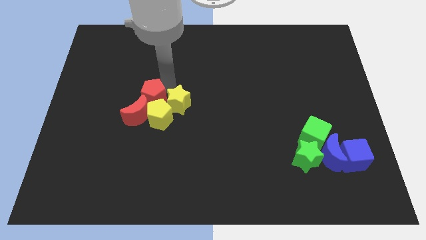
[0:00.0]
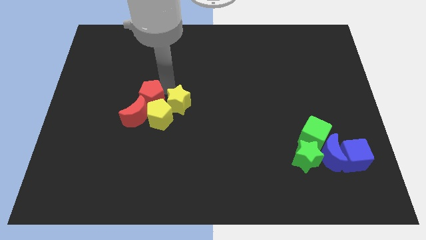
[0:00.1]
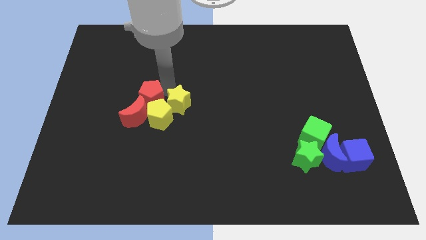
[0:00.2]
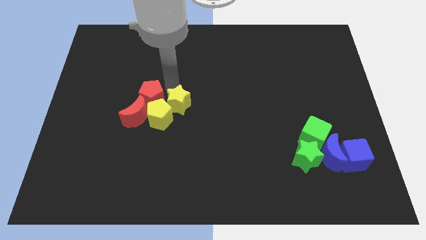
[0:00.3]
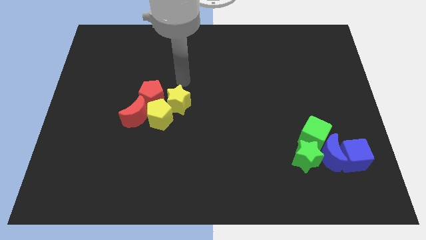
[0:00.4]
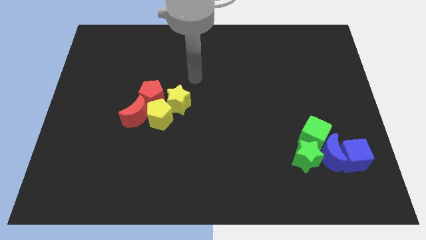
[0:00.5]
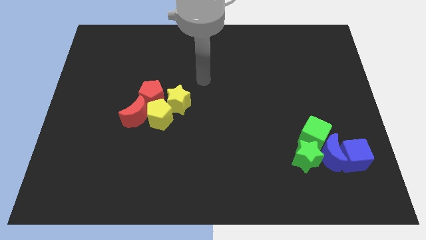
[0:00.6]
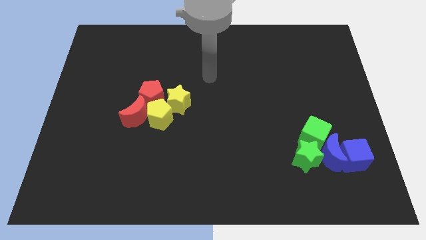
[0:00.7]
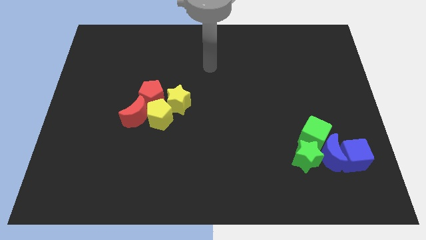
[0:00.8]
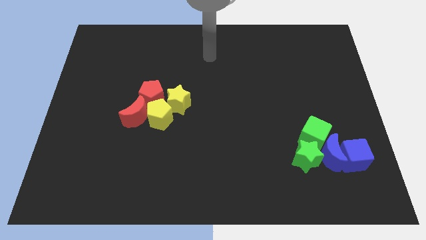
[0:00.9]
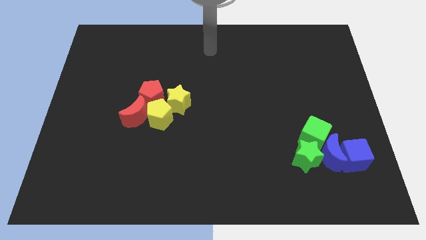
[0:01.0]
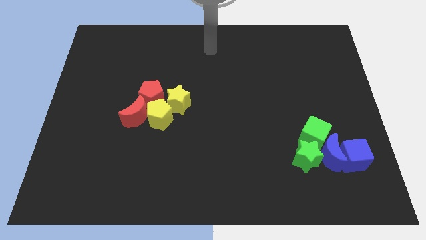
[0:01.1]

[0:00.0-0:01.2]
move arm to the center top

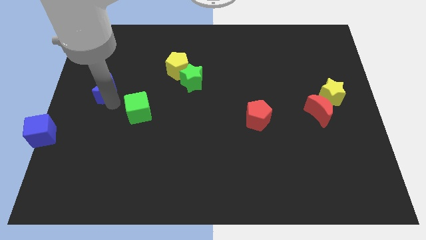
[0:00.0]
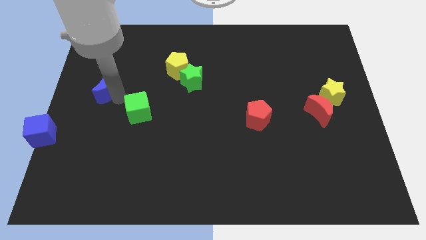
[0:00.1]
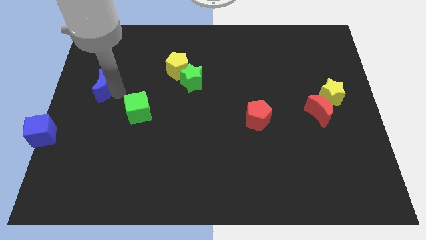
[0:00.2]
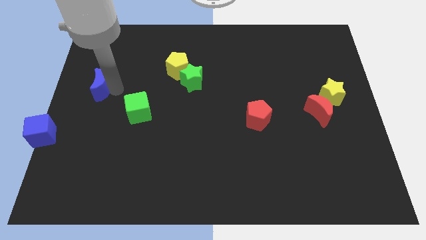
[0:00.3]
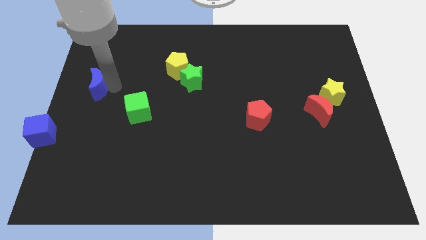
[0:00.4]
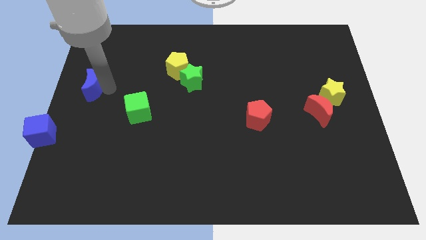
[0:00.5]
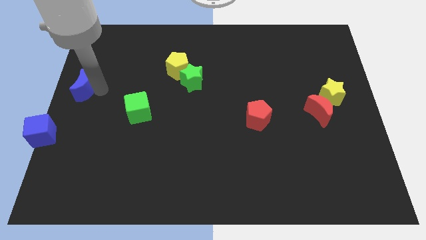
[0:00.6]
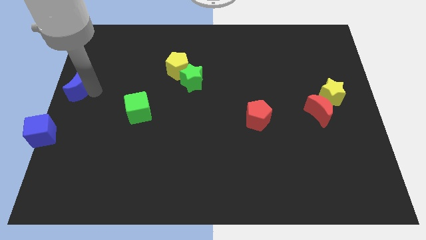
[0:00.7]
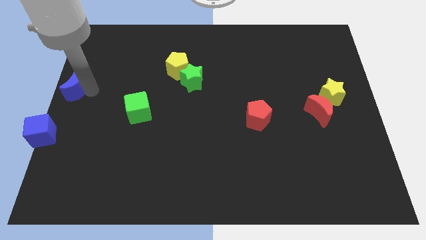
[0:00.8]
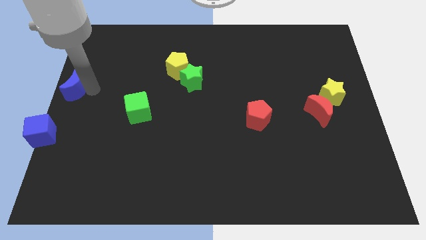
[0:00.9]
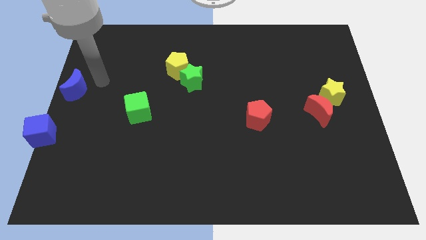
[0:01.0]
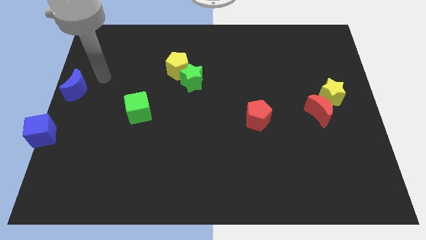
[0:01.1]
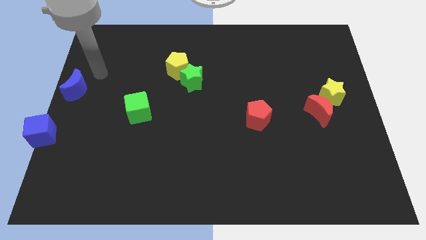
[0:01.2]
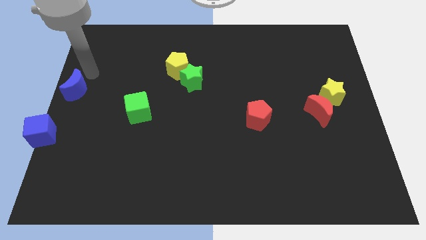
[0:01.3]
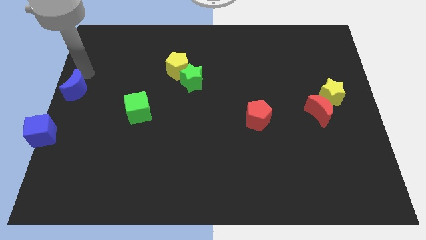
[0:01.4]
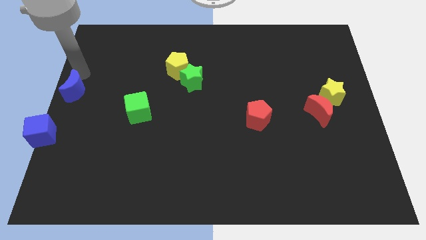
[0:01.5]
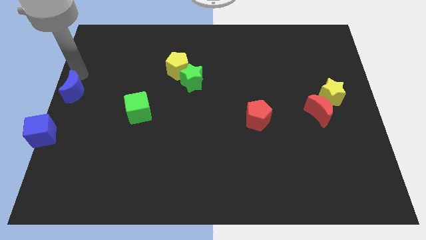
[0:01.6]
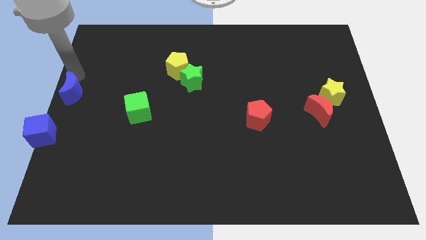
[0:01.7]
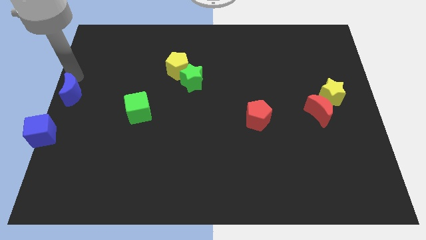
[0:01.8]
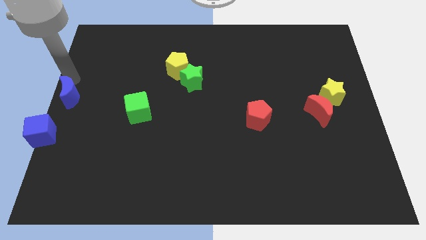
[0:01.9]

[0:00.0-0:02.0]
push the blue moon to the left of the board

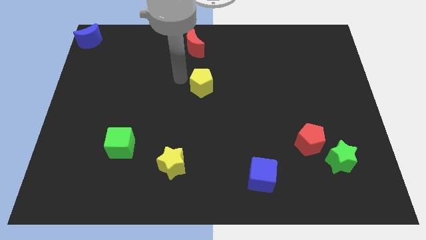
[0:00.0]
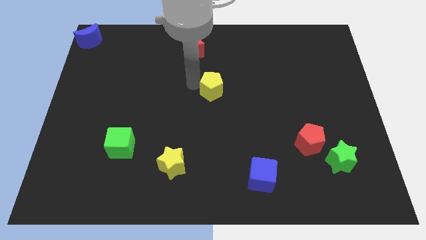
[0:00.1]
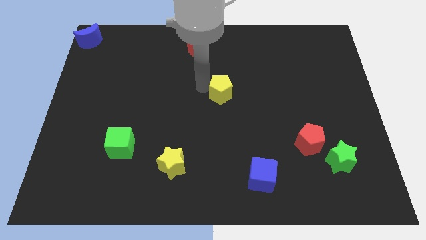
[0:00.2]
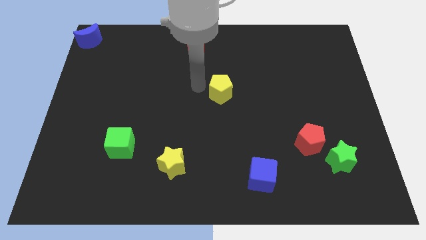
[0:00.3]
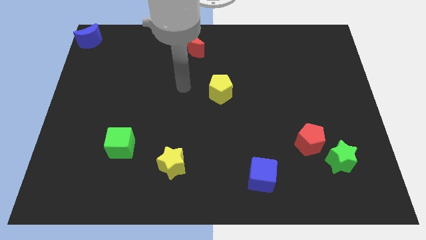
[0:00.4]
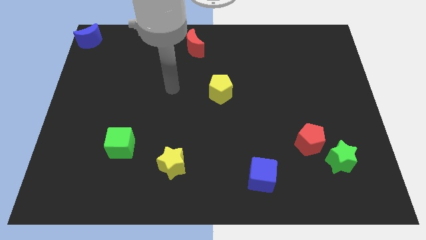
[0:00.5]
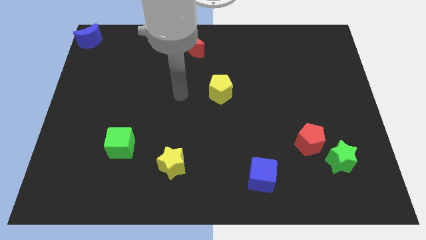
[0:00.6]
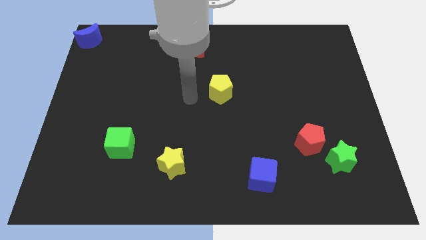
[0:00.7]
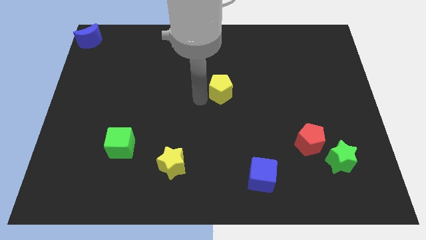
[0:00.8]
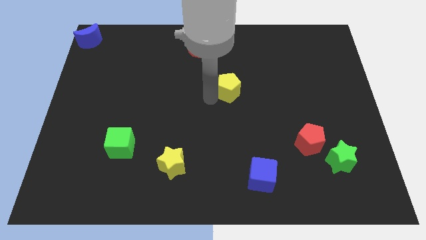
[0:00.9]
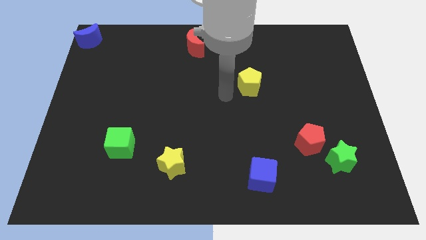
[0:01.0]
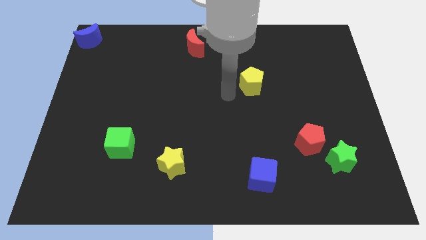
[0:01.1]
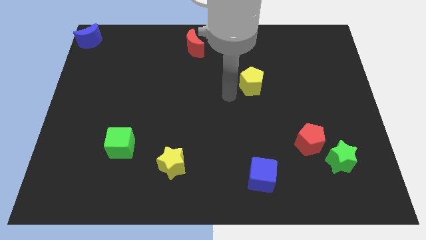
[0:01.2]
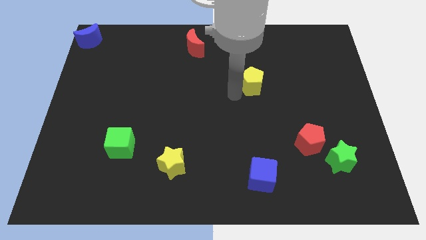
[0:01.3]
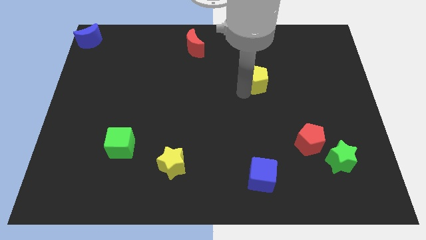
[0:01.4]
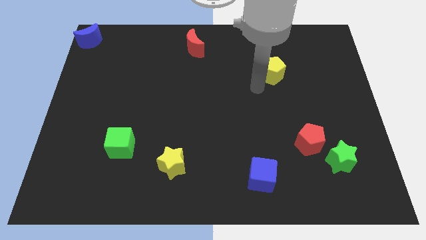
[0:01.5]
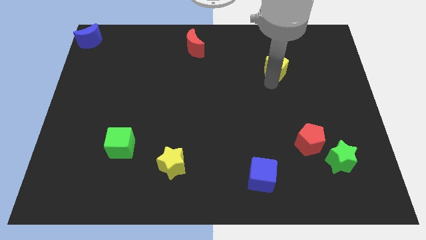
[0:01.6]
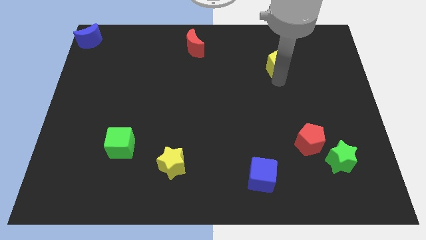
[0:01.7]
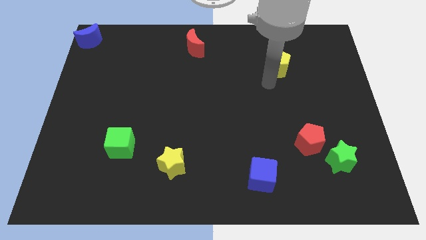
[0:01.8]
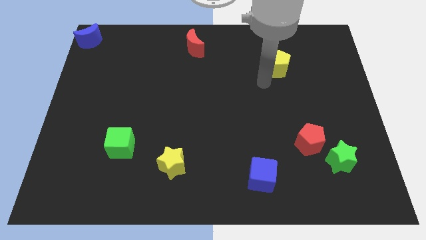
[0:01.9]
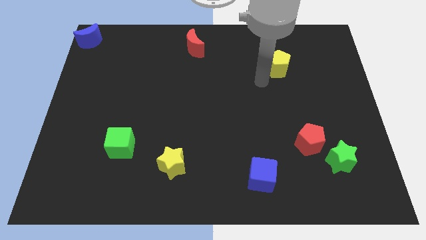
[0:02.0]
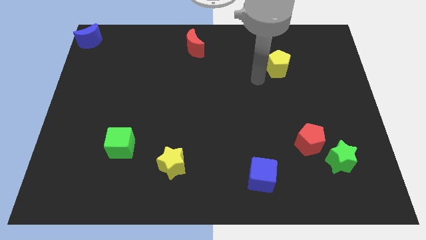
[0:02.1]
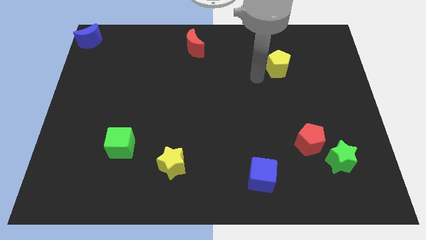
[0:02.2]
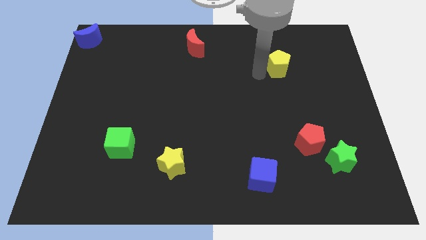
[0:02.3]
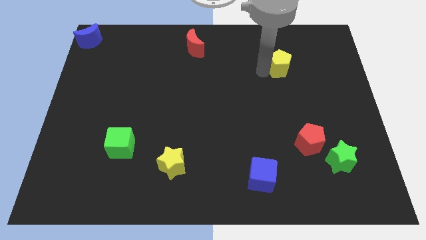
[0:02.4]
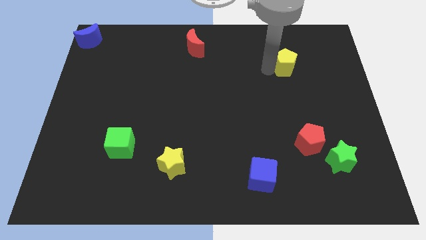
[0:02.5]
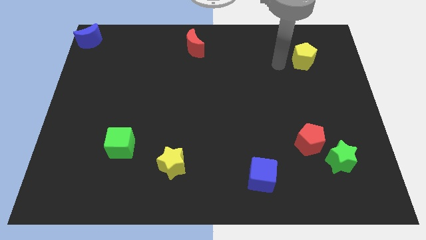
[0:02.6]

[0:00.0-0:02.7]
place the yellow pentagon vertically above the red pentagon

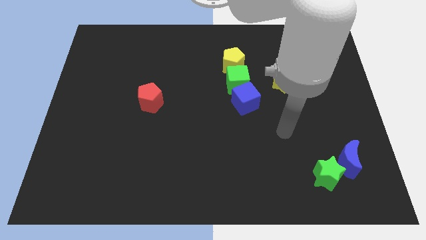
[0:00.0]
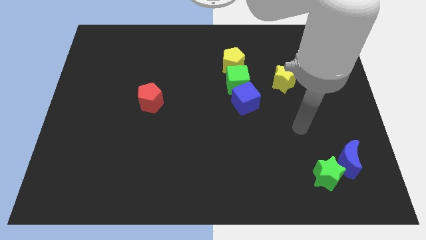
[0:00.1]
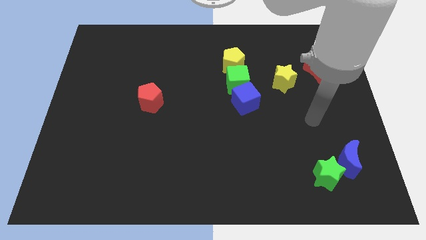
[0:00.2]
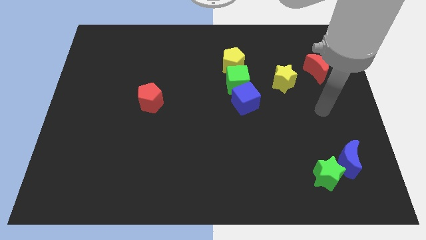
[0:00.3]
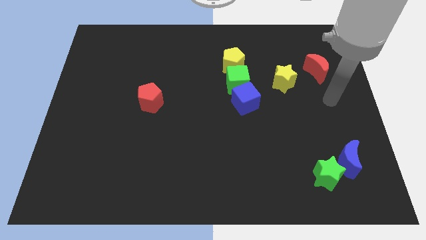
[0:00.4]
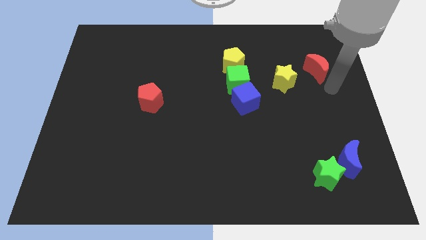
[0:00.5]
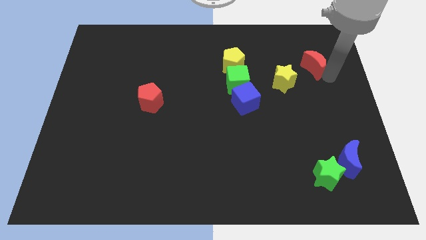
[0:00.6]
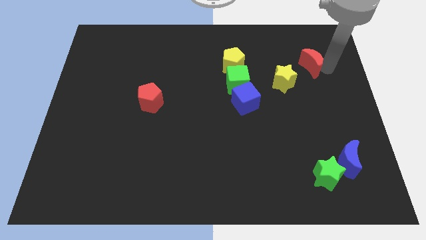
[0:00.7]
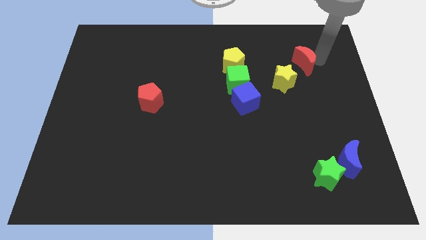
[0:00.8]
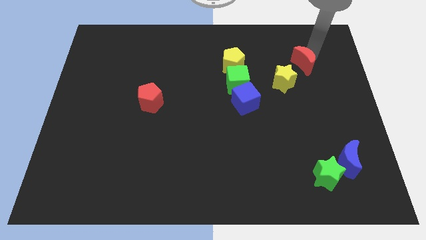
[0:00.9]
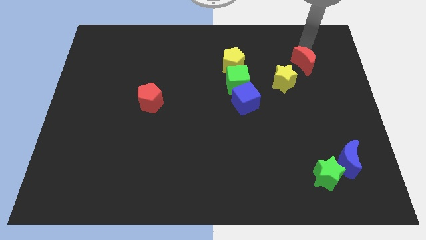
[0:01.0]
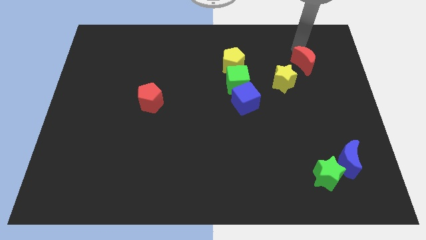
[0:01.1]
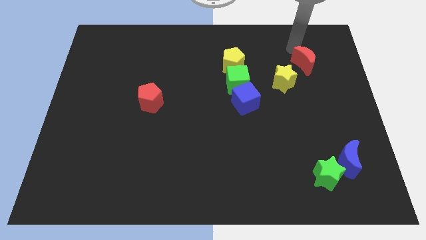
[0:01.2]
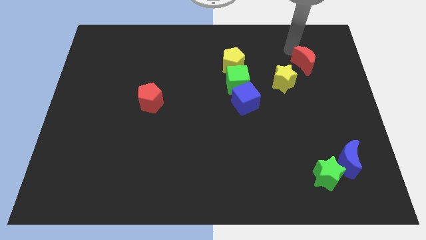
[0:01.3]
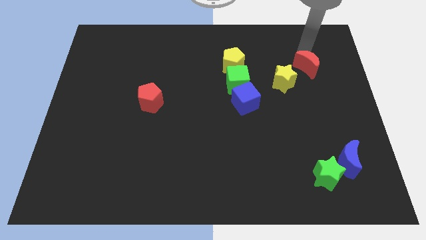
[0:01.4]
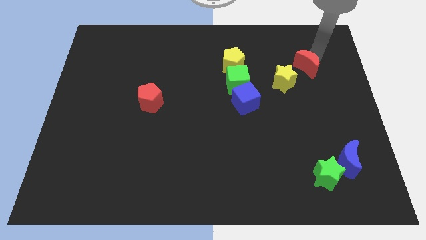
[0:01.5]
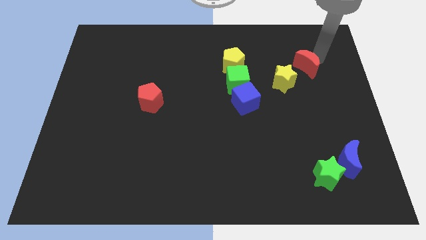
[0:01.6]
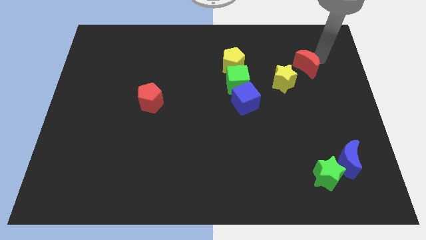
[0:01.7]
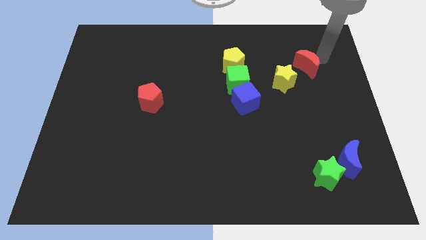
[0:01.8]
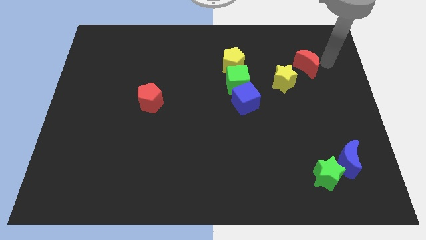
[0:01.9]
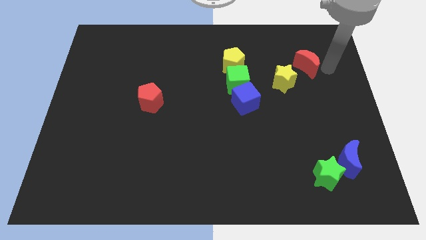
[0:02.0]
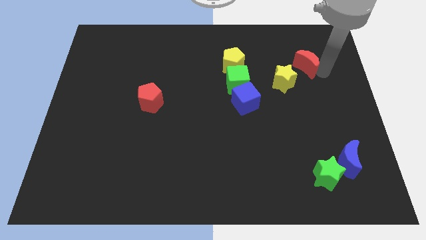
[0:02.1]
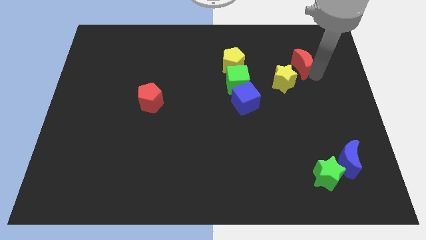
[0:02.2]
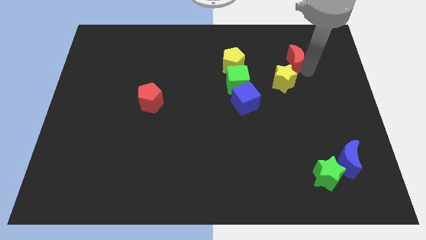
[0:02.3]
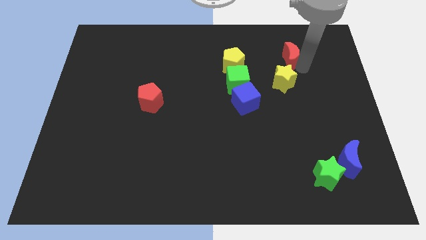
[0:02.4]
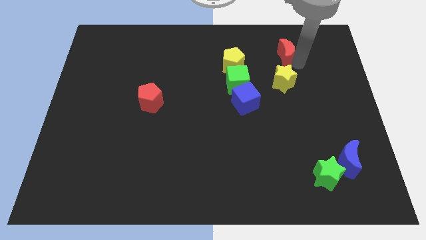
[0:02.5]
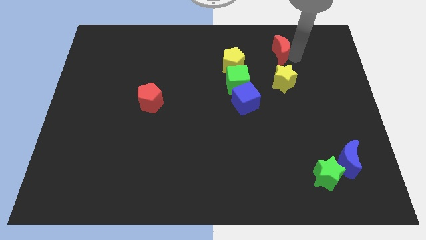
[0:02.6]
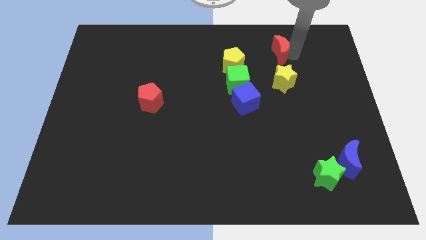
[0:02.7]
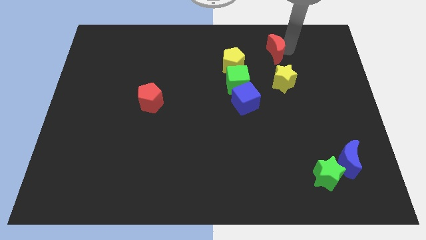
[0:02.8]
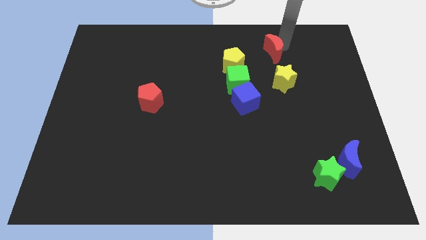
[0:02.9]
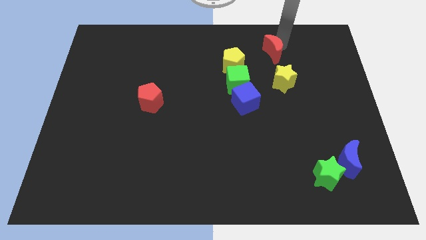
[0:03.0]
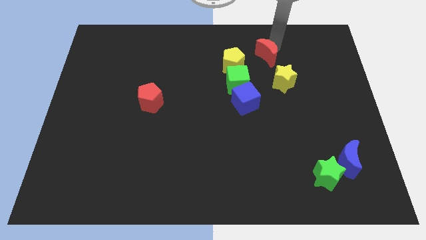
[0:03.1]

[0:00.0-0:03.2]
place red crescent above to the yellow star

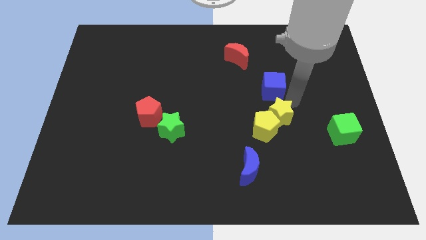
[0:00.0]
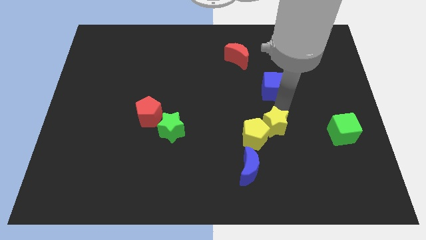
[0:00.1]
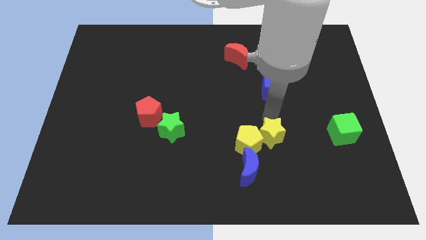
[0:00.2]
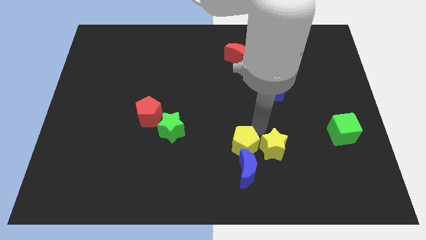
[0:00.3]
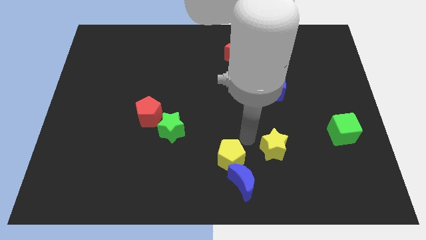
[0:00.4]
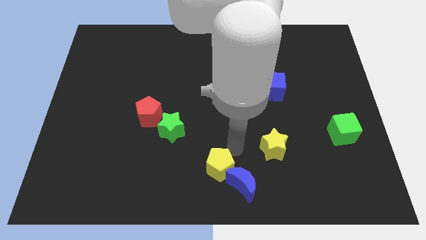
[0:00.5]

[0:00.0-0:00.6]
make the yellow pentagon to touch the blue crescent
